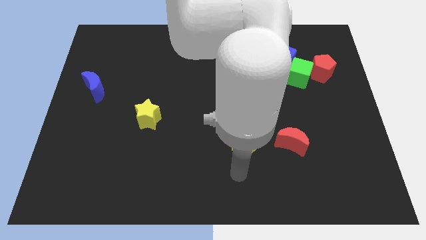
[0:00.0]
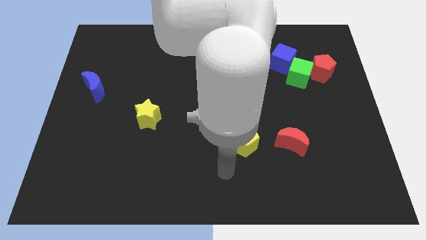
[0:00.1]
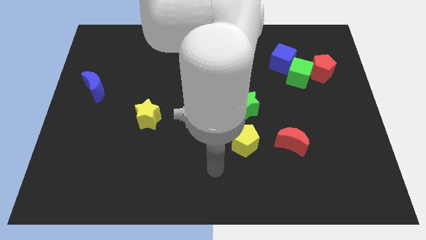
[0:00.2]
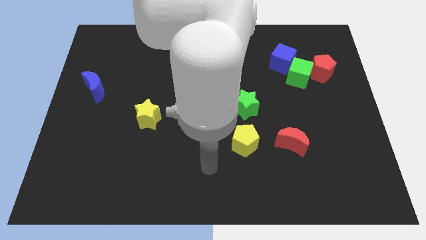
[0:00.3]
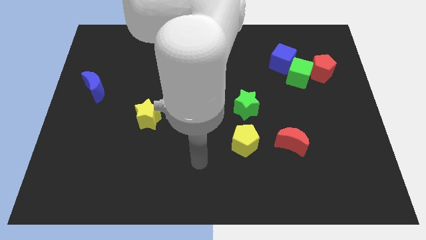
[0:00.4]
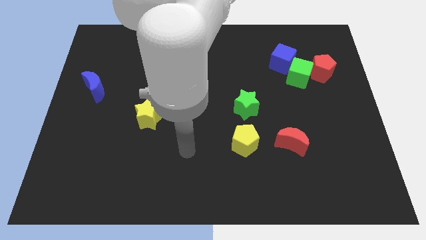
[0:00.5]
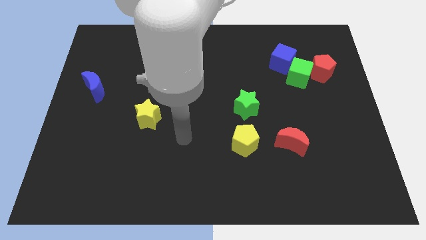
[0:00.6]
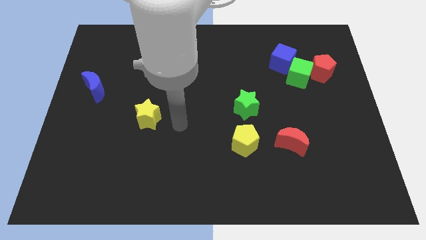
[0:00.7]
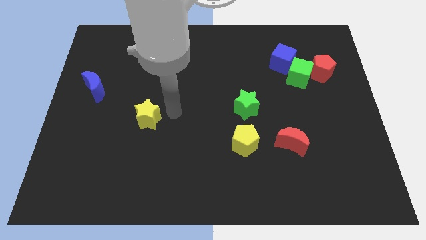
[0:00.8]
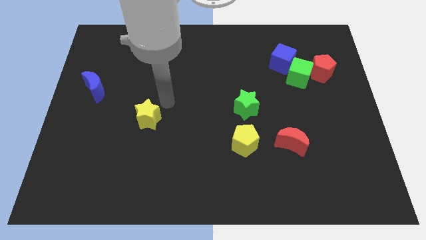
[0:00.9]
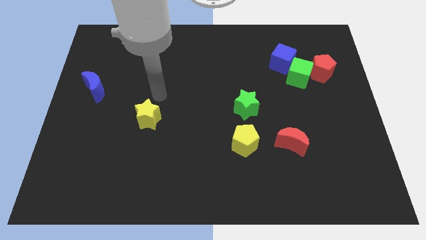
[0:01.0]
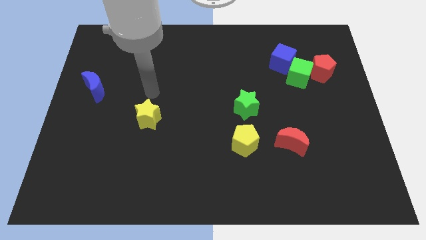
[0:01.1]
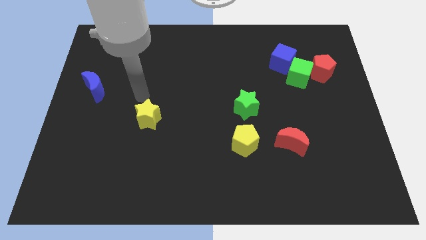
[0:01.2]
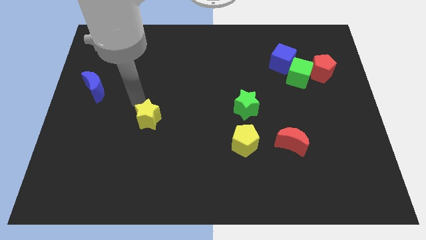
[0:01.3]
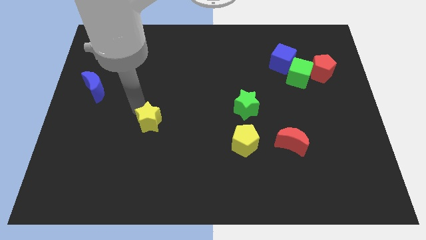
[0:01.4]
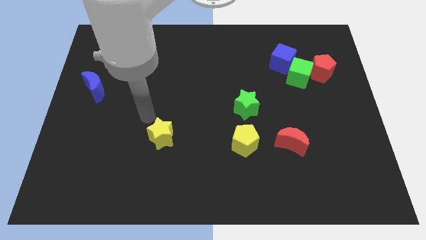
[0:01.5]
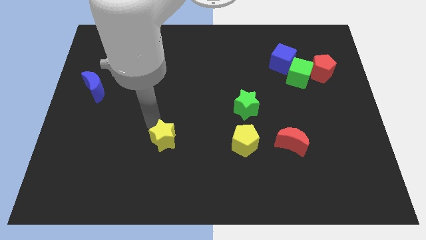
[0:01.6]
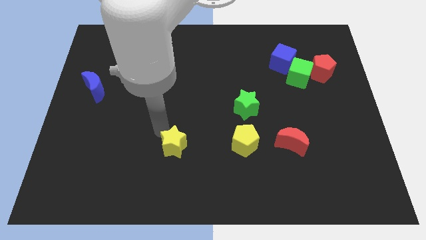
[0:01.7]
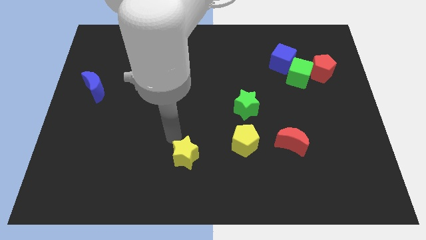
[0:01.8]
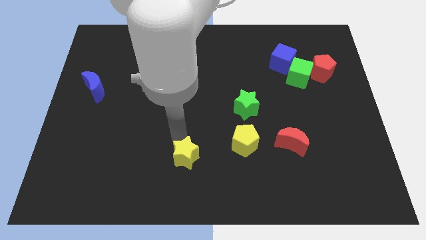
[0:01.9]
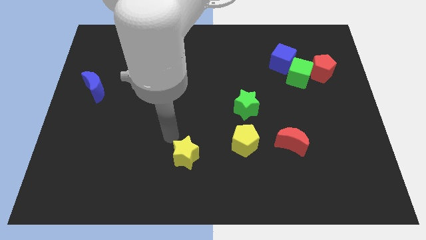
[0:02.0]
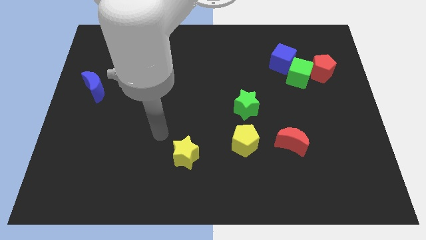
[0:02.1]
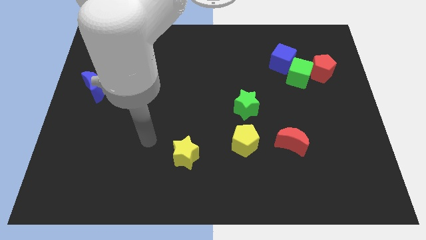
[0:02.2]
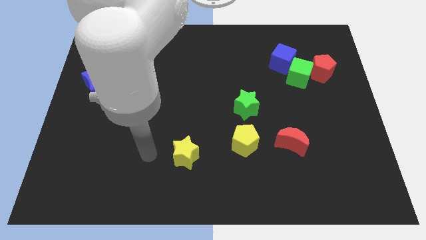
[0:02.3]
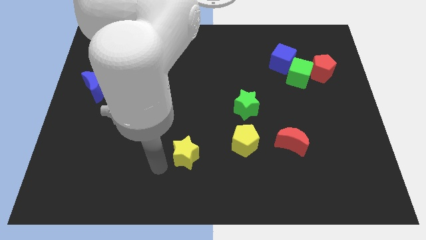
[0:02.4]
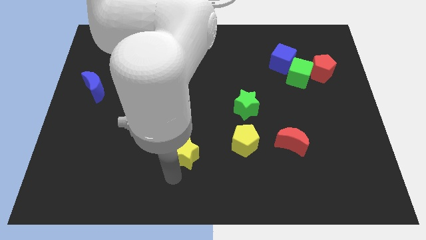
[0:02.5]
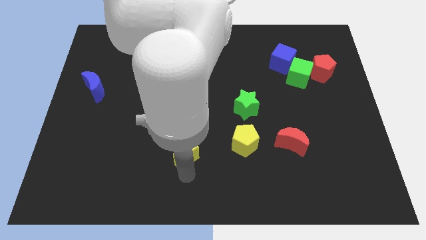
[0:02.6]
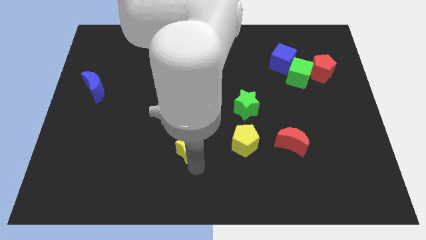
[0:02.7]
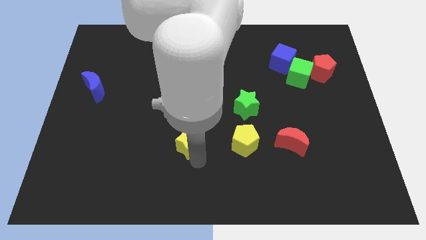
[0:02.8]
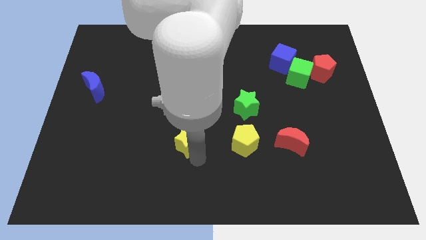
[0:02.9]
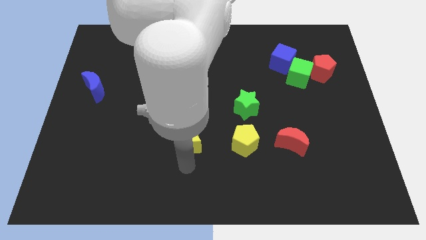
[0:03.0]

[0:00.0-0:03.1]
slide the yellow star to the left of the yellow pentagon

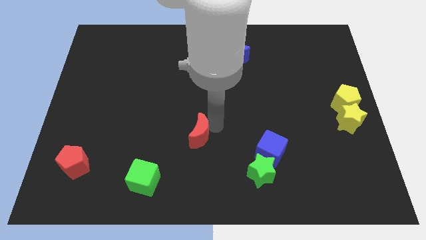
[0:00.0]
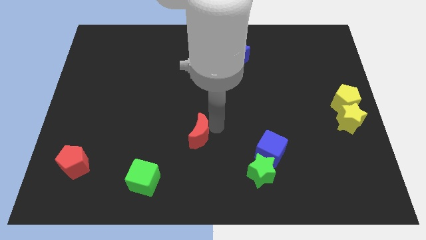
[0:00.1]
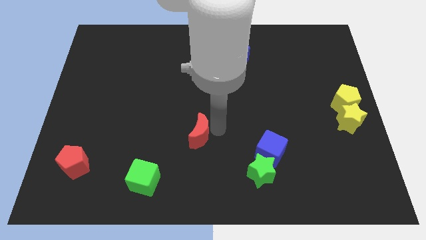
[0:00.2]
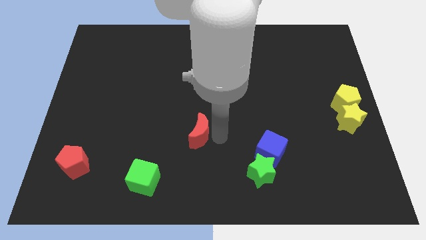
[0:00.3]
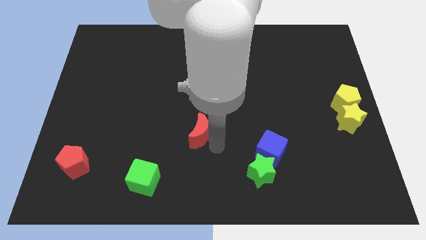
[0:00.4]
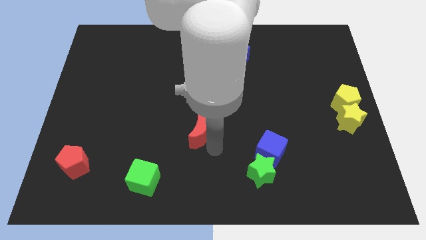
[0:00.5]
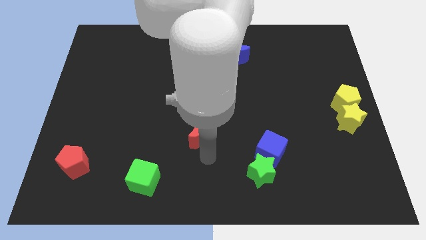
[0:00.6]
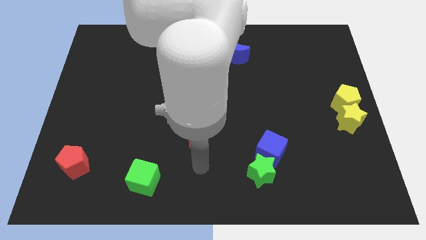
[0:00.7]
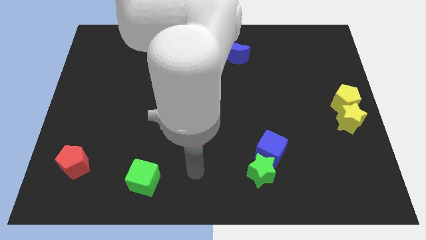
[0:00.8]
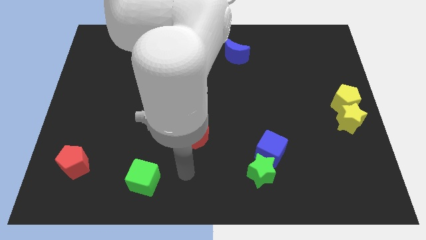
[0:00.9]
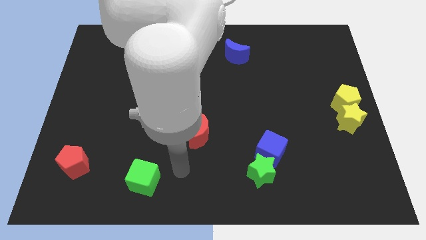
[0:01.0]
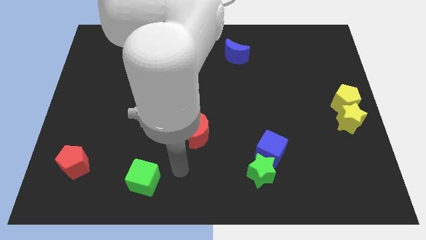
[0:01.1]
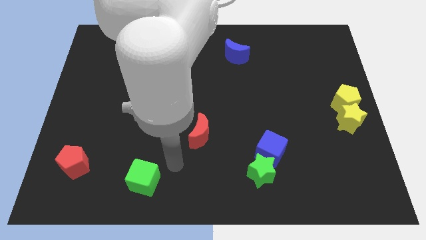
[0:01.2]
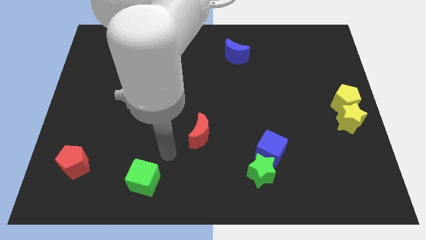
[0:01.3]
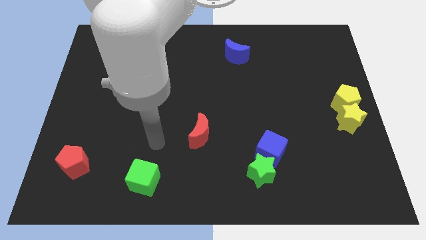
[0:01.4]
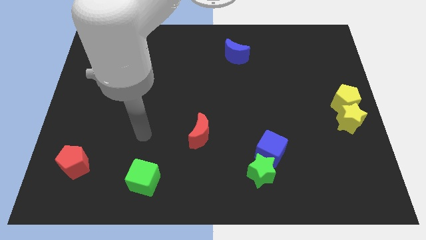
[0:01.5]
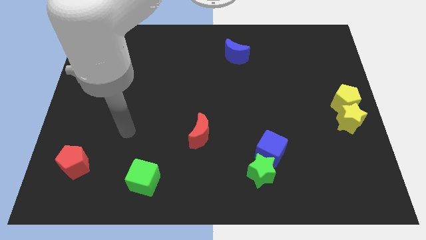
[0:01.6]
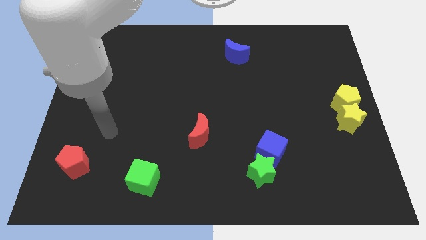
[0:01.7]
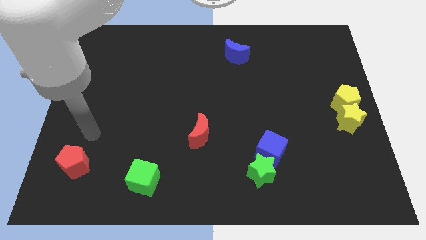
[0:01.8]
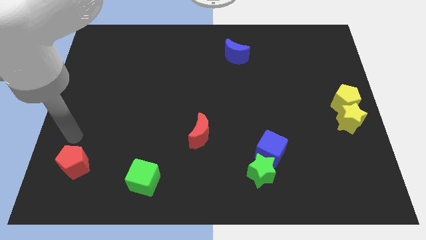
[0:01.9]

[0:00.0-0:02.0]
move away from red crescent without disturbing it

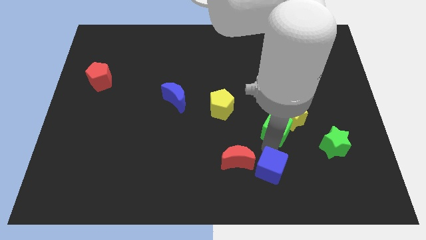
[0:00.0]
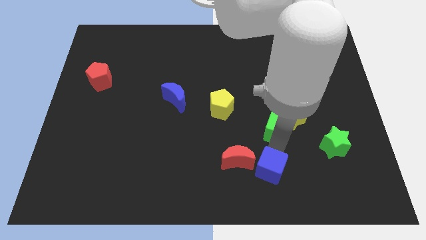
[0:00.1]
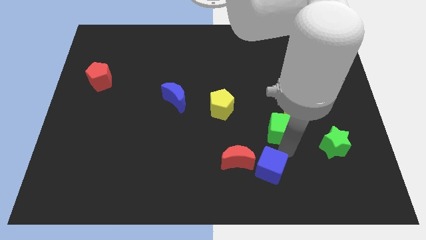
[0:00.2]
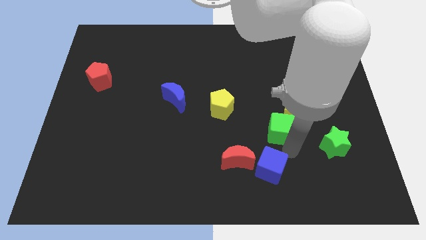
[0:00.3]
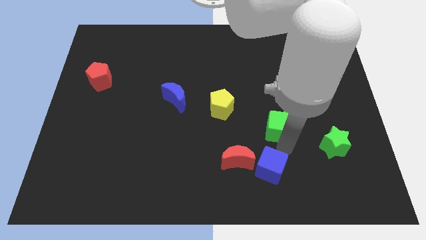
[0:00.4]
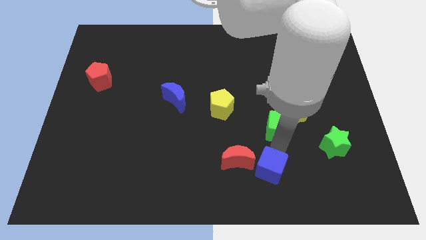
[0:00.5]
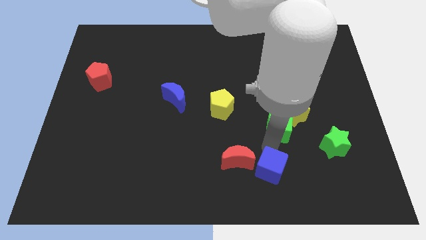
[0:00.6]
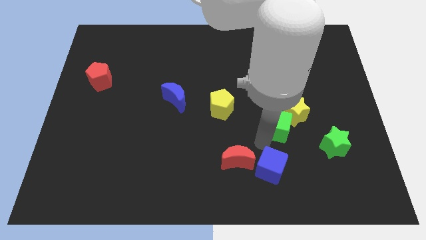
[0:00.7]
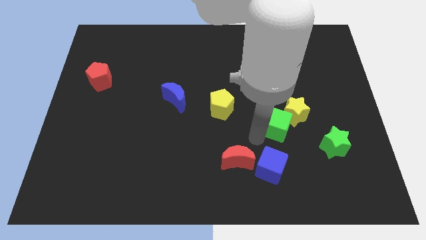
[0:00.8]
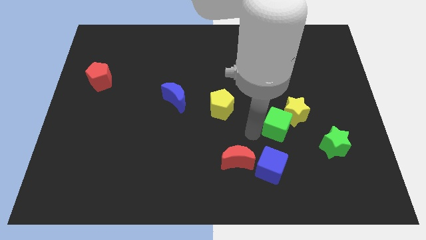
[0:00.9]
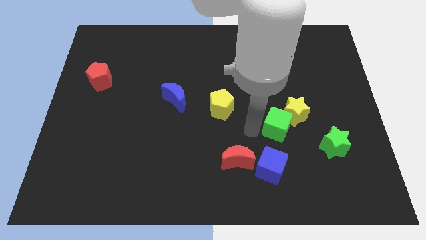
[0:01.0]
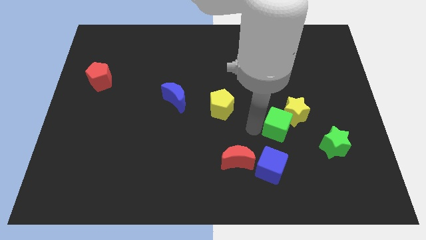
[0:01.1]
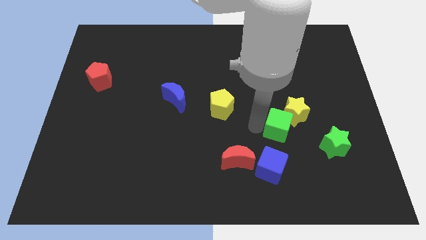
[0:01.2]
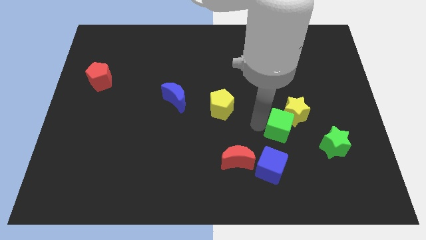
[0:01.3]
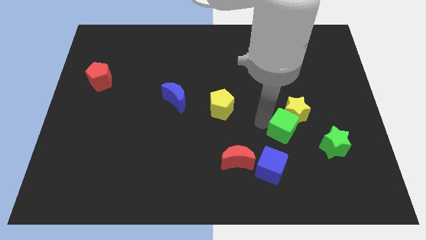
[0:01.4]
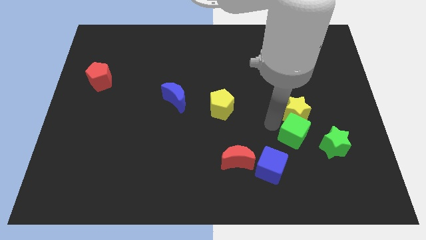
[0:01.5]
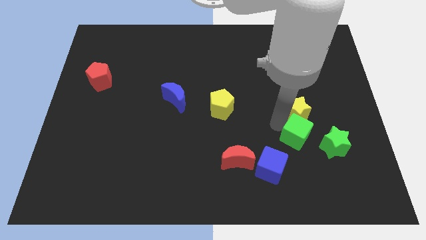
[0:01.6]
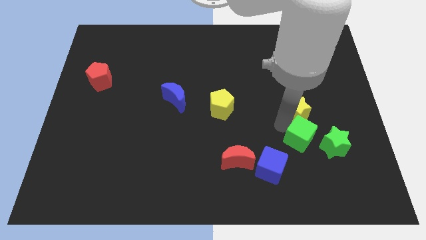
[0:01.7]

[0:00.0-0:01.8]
place the green cube to the bottom of the yellow star

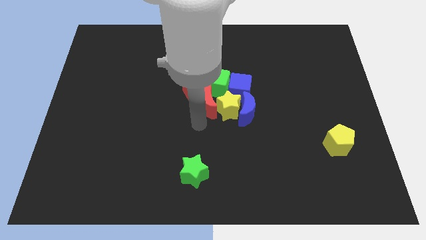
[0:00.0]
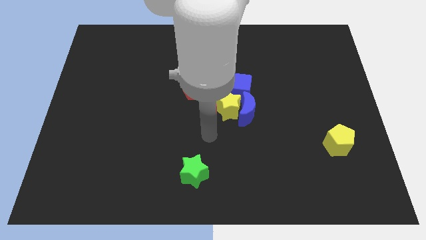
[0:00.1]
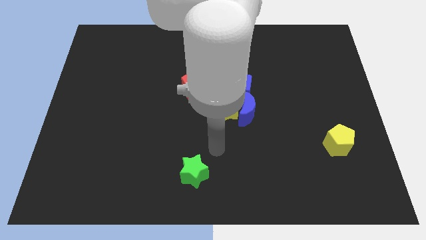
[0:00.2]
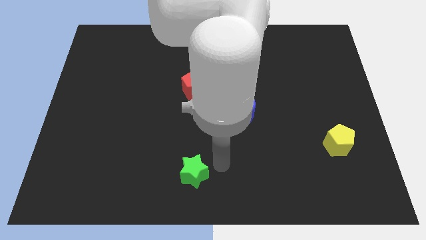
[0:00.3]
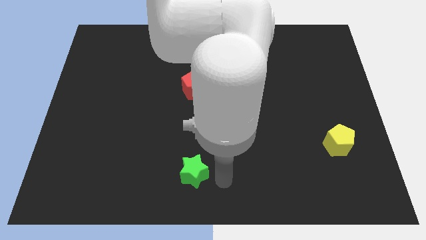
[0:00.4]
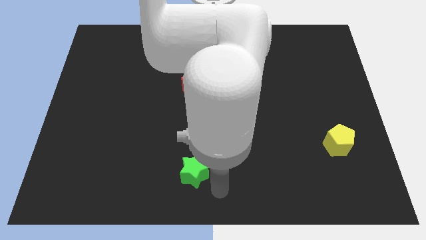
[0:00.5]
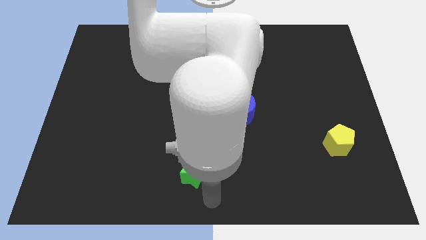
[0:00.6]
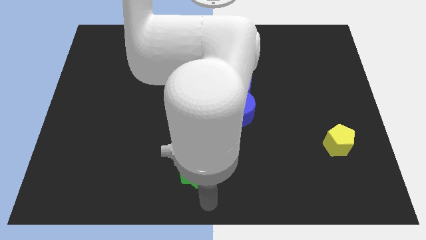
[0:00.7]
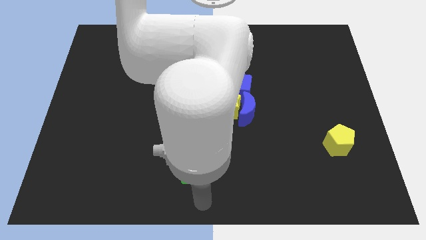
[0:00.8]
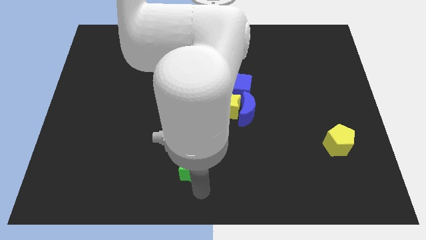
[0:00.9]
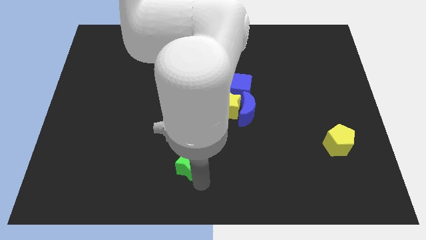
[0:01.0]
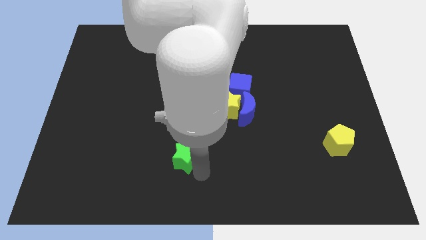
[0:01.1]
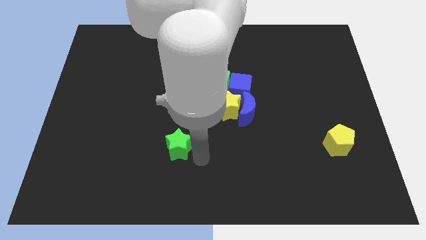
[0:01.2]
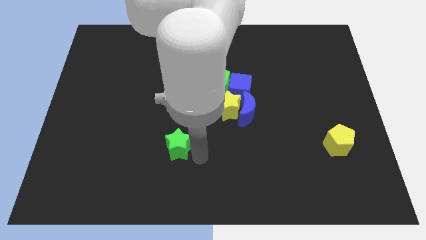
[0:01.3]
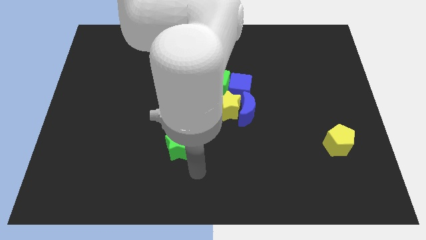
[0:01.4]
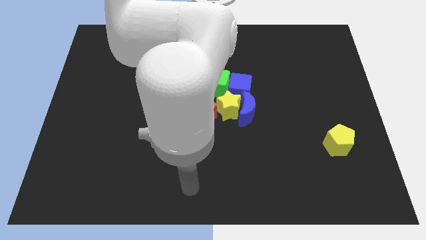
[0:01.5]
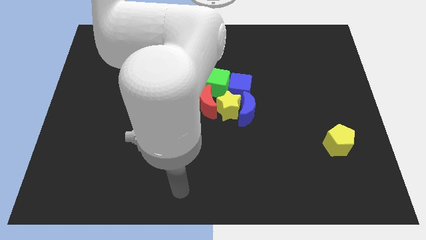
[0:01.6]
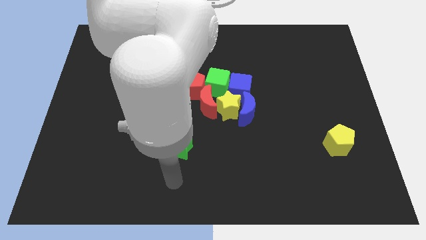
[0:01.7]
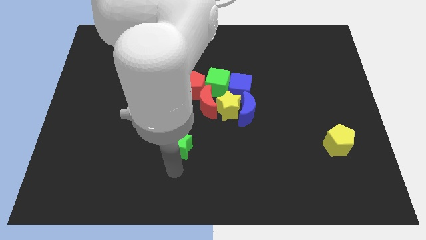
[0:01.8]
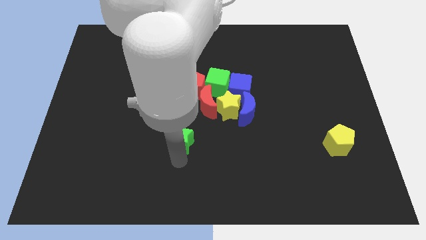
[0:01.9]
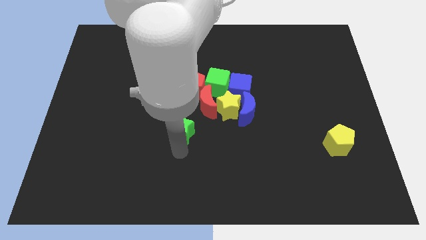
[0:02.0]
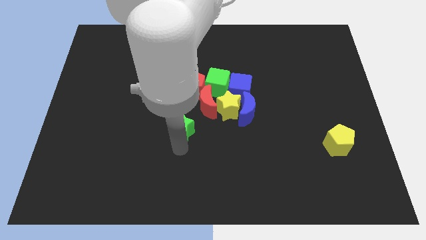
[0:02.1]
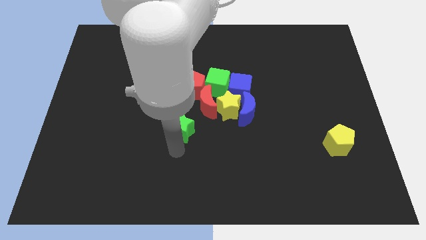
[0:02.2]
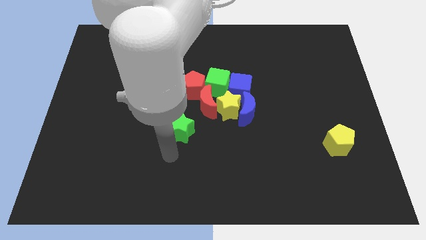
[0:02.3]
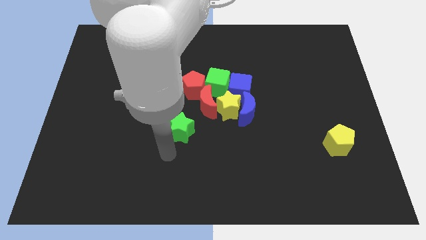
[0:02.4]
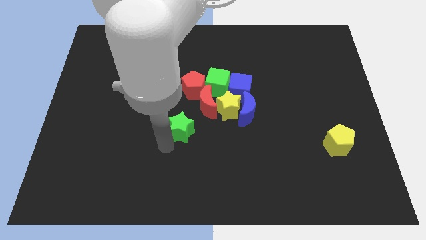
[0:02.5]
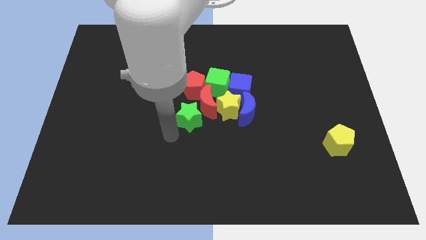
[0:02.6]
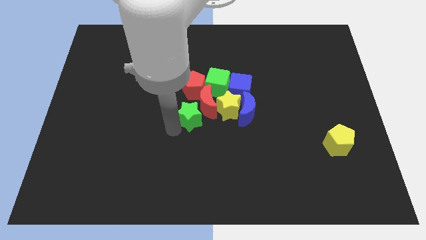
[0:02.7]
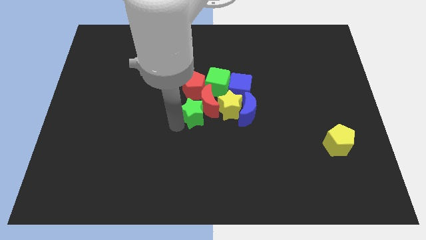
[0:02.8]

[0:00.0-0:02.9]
place the green star to left side of the red blocks
